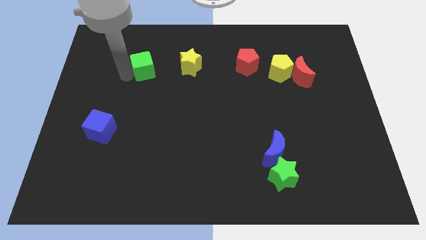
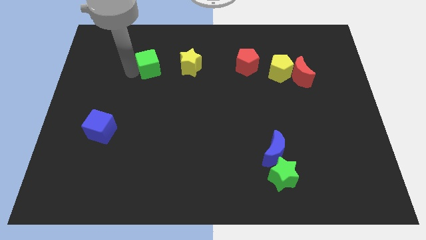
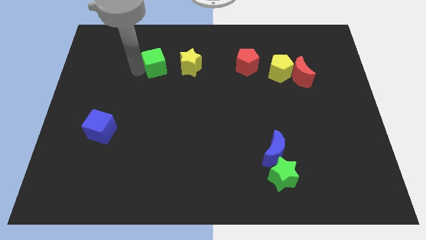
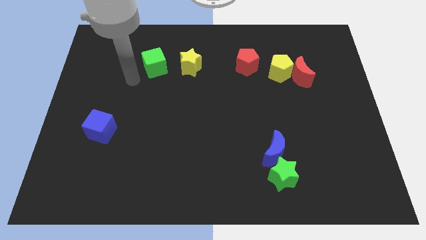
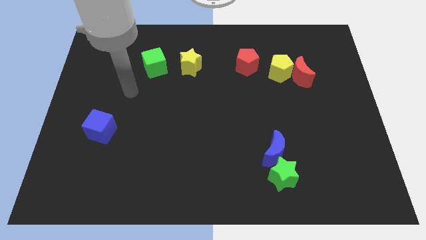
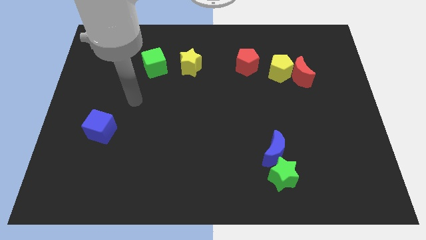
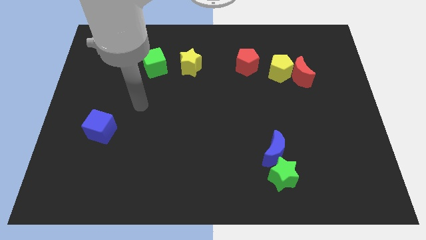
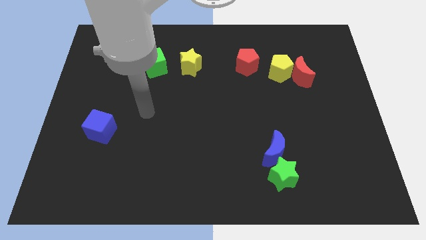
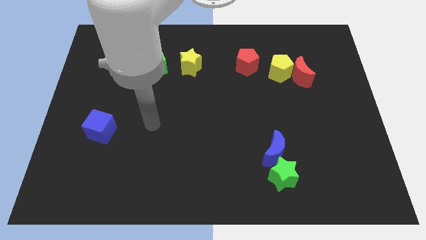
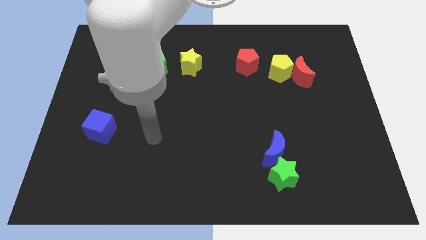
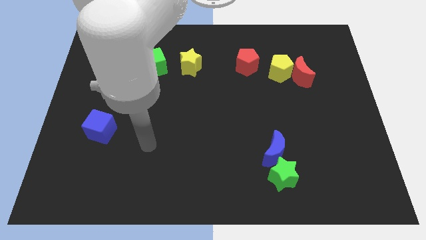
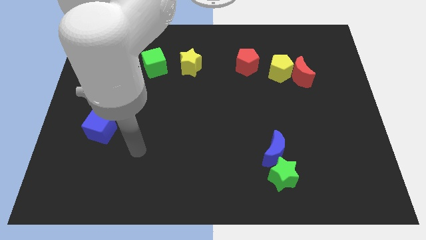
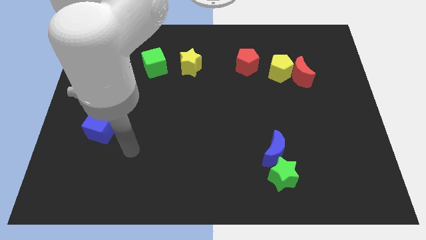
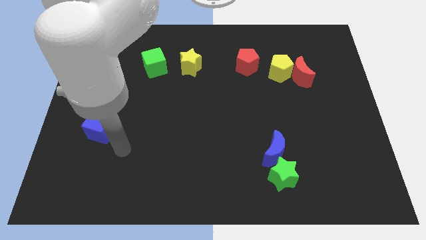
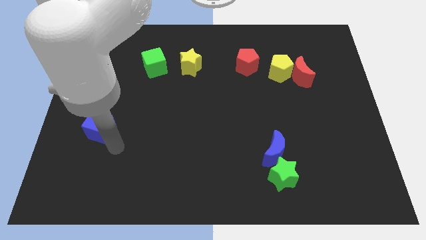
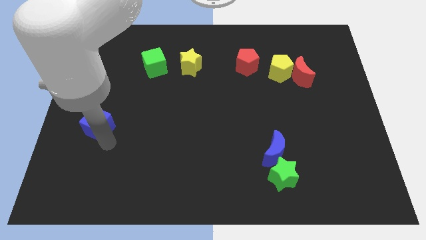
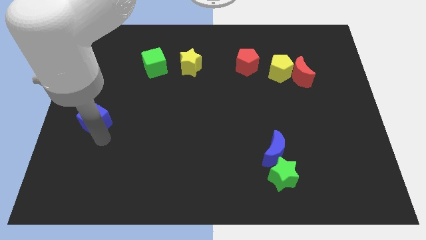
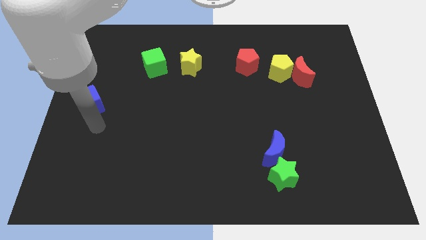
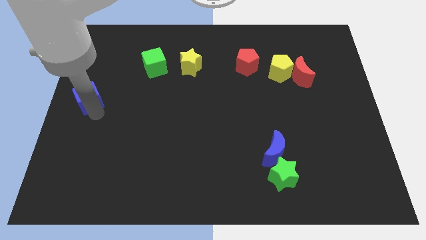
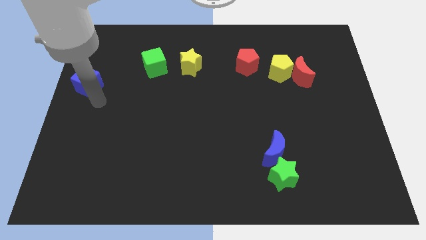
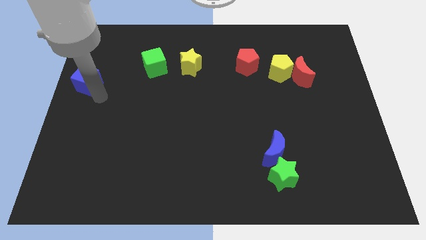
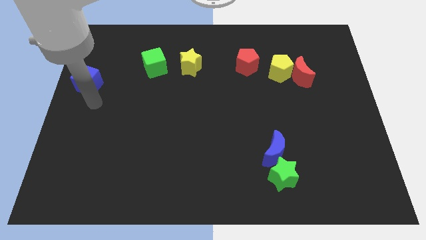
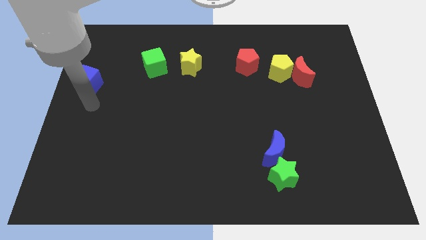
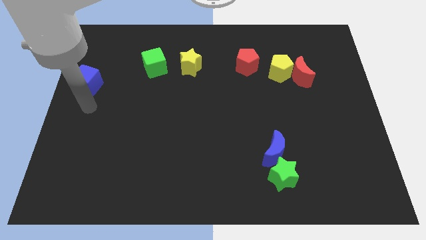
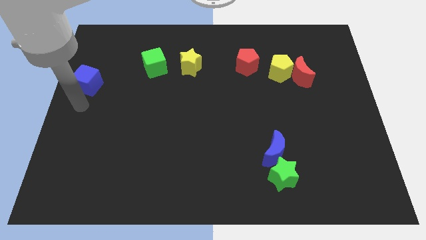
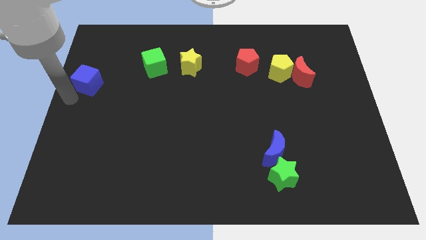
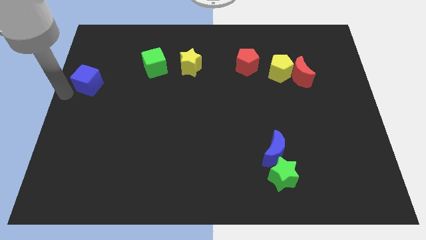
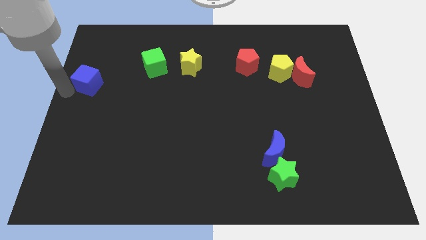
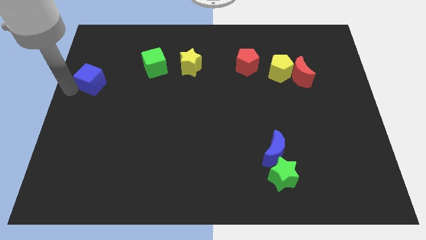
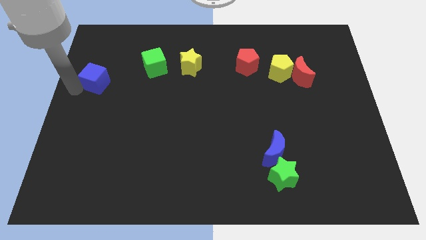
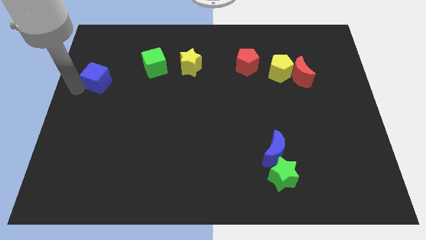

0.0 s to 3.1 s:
slide the blue cube to the left of green cube

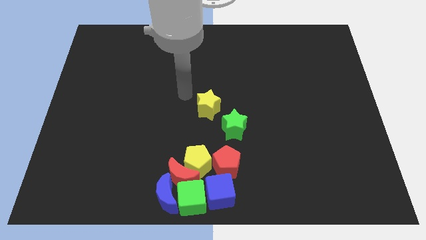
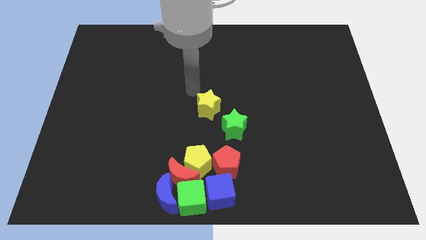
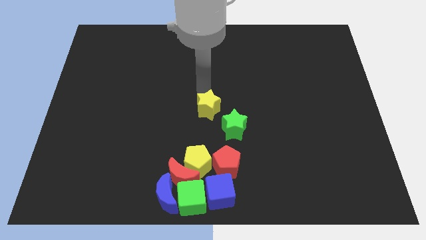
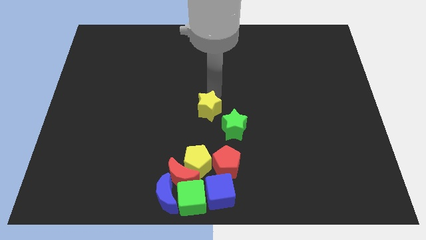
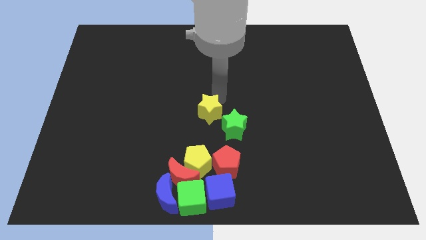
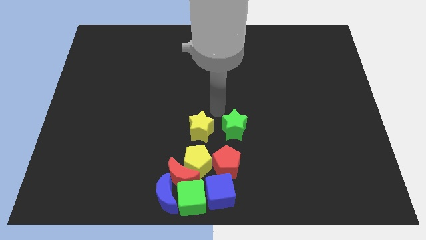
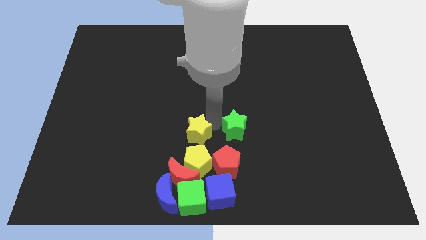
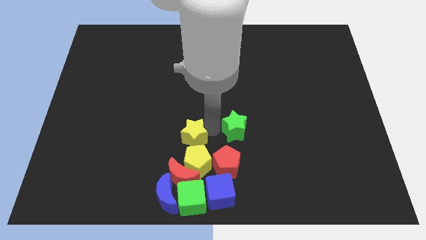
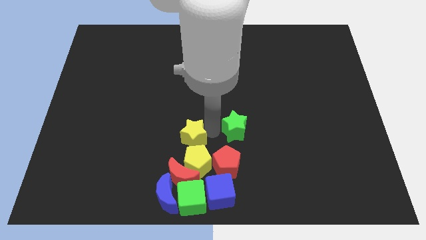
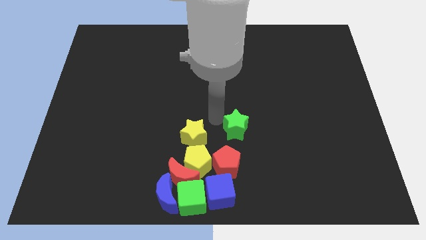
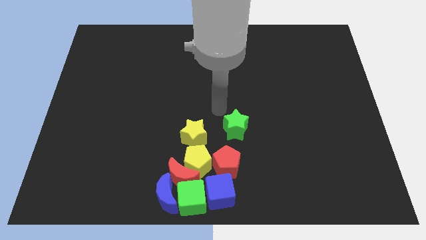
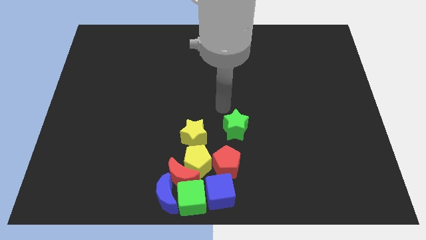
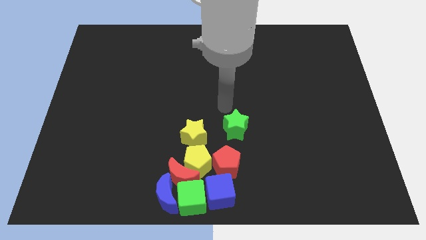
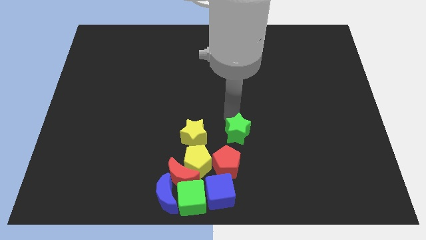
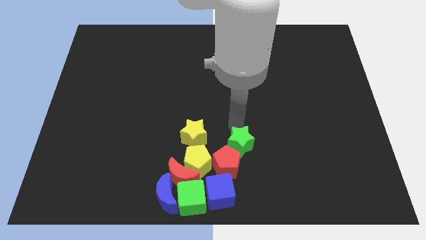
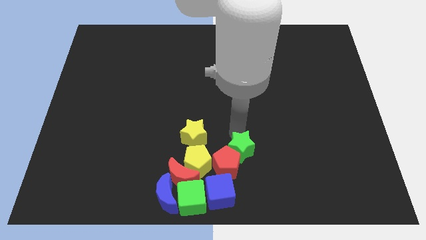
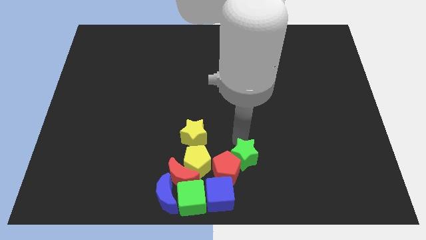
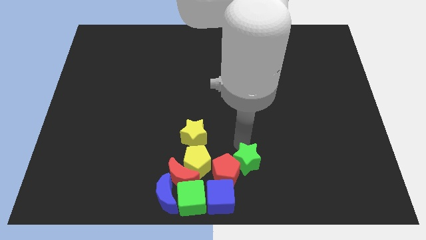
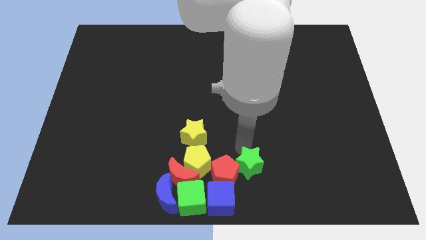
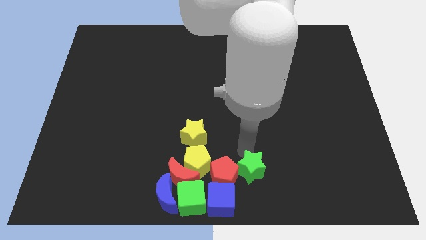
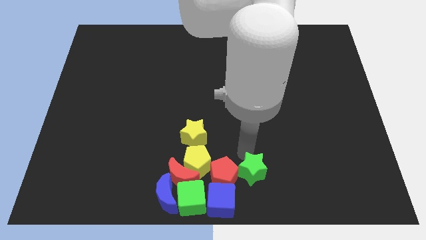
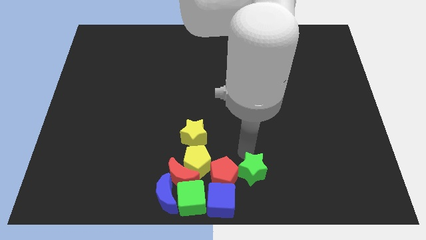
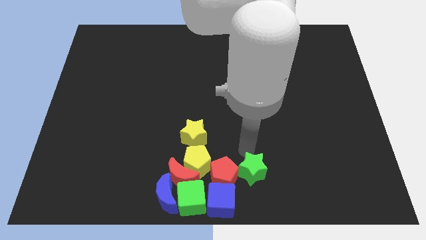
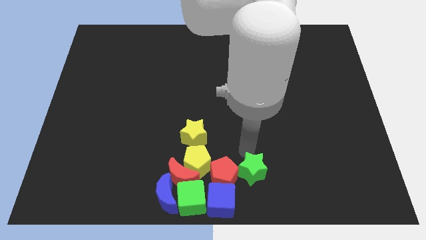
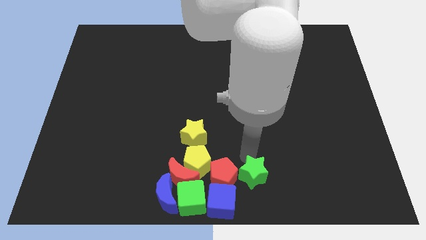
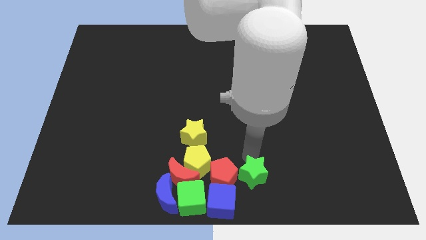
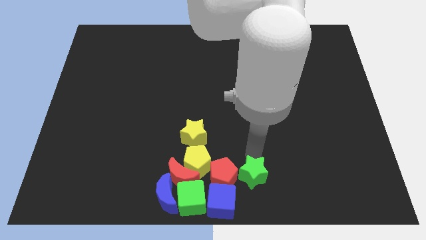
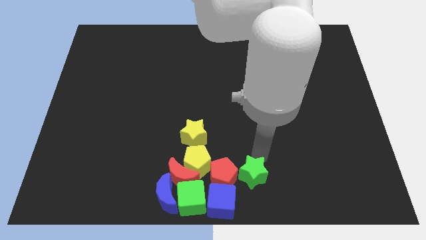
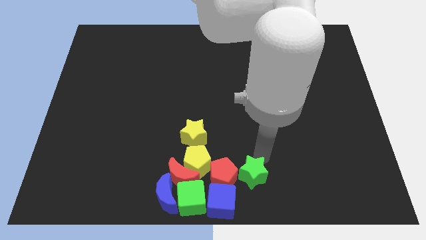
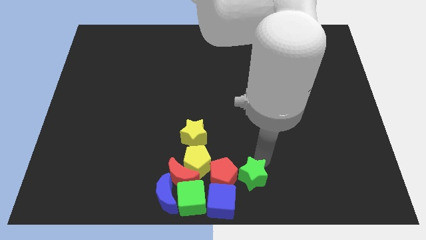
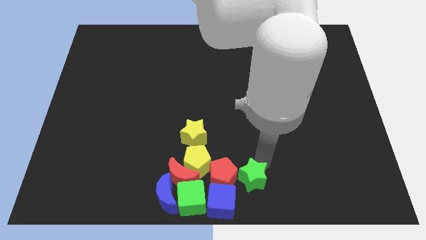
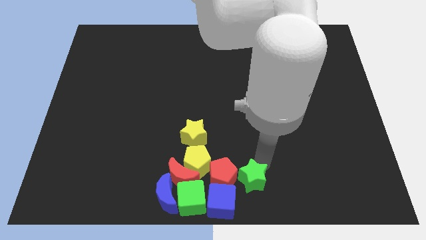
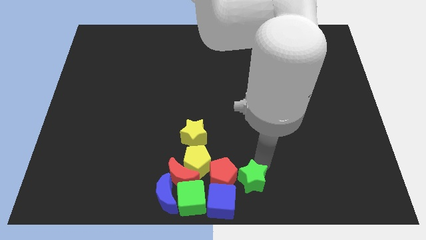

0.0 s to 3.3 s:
place the green star to the right side of the red pentagon

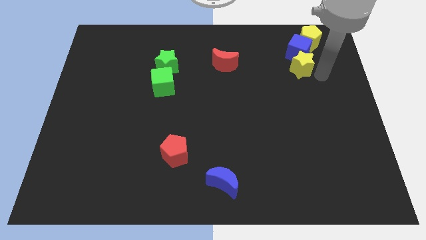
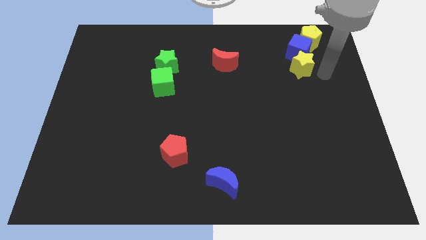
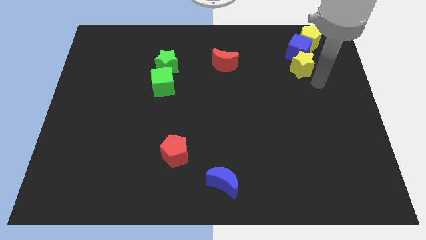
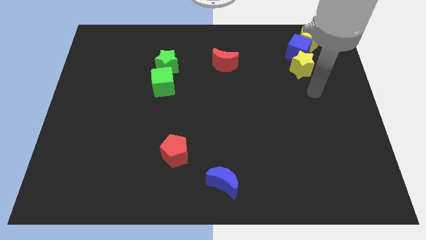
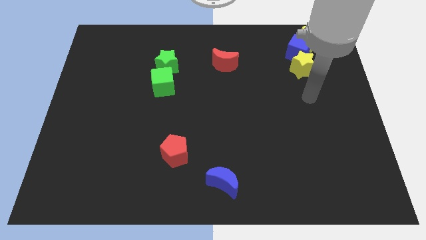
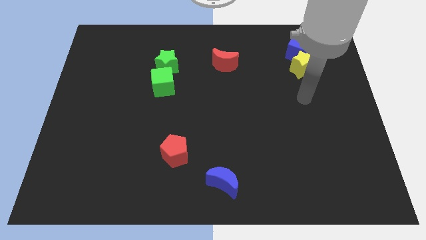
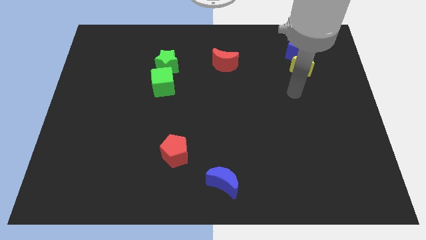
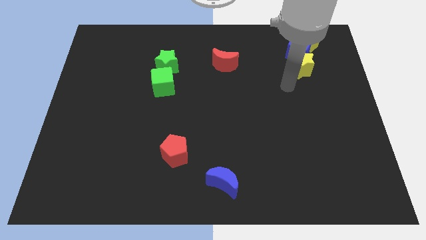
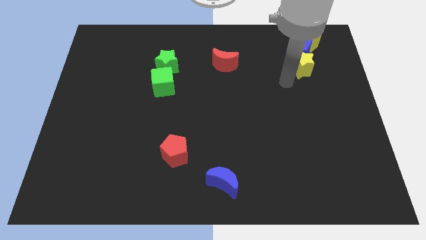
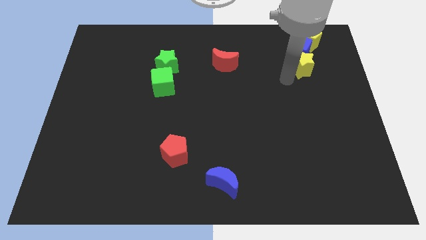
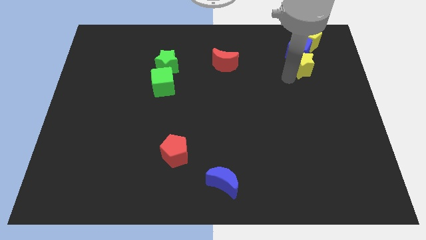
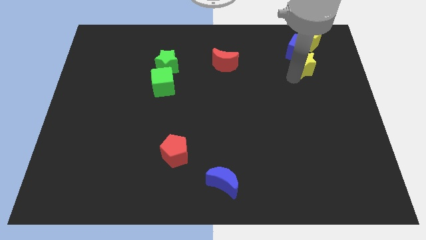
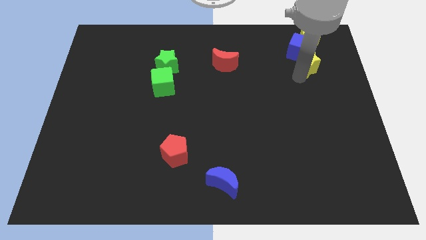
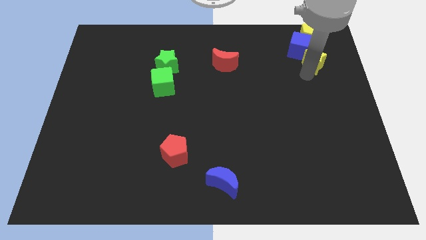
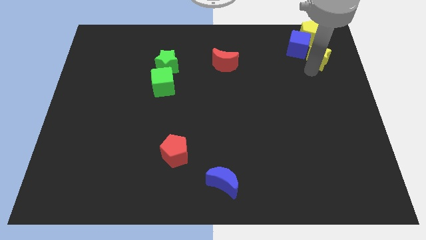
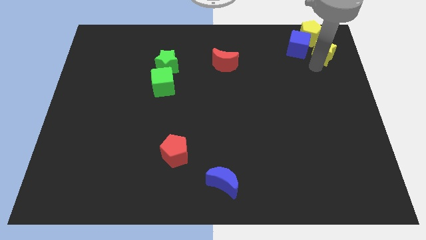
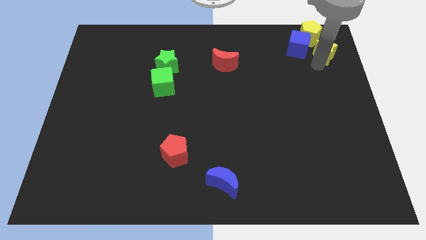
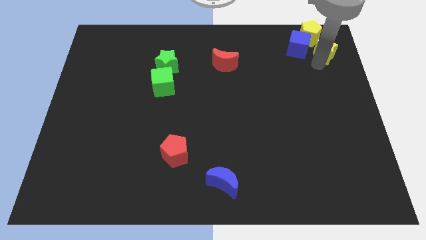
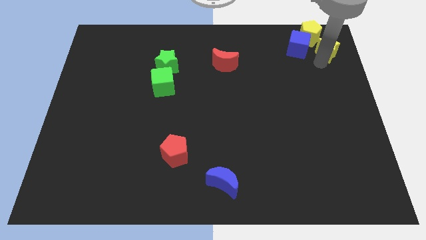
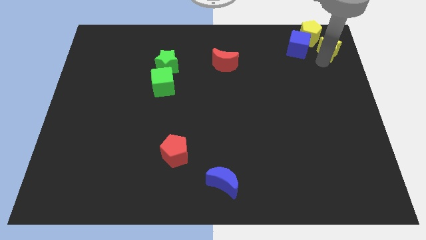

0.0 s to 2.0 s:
place the yellow star to the right of the blue cube

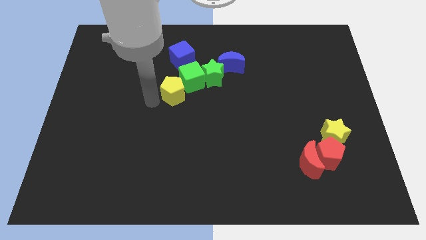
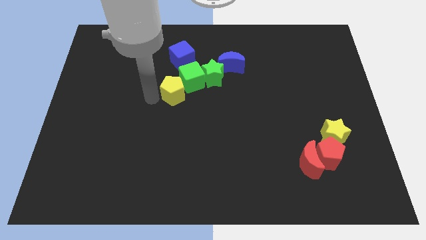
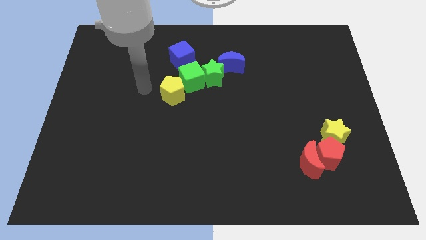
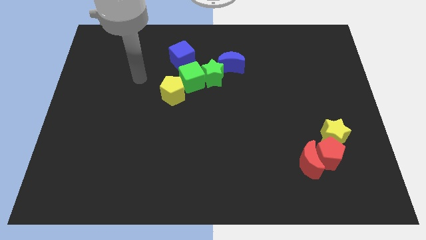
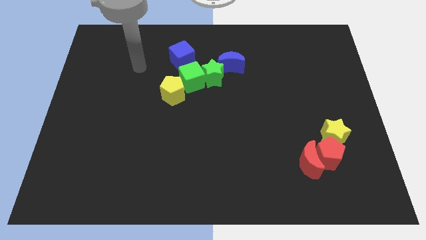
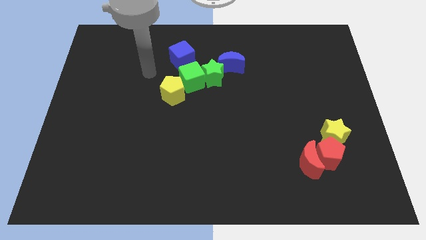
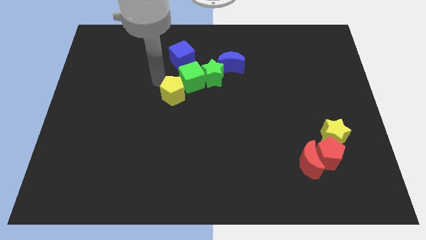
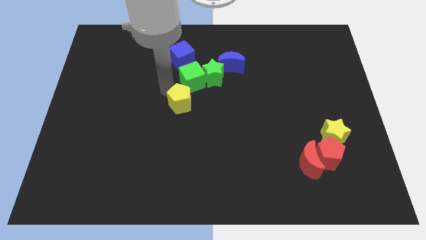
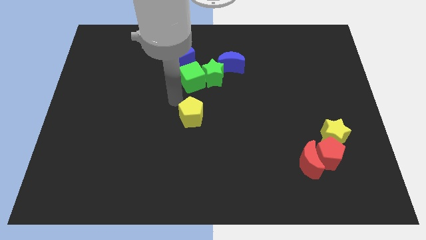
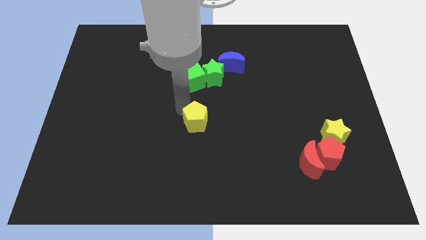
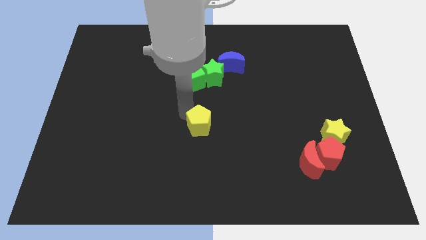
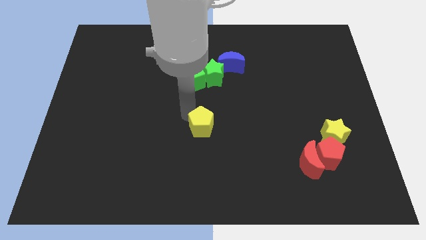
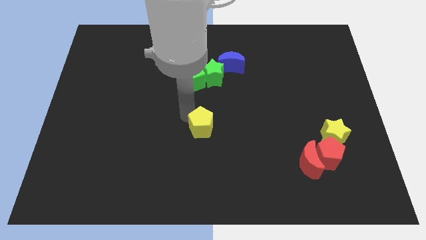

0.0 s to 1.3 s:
push the yellow pentagon away from the green cube
